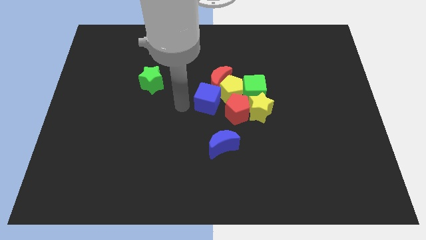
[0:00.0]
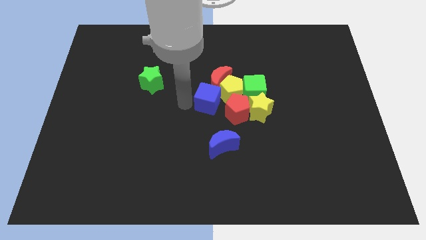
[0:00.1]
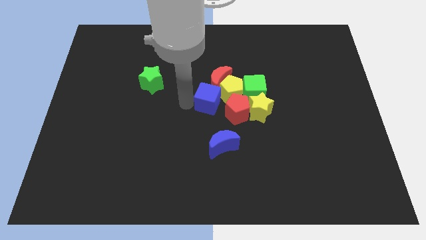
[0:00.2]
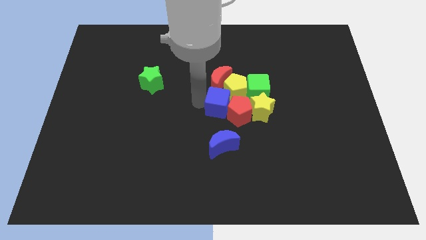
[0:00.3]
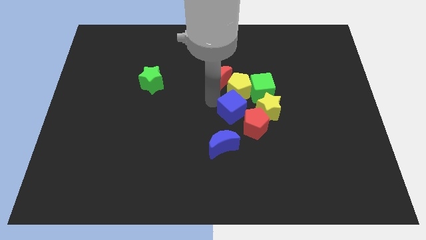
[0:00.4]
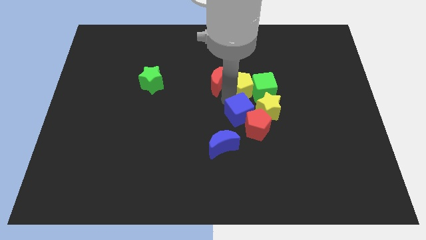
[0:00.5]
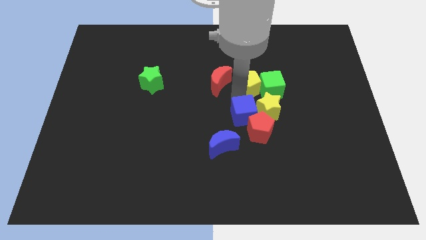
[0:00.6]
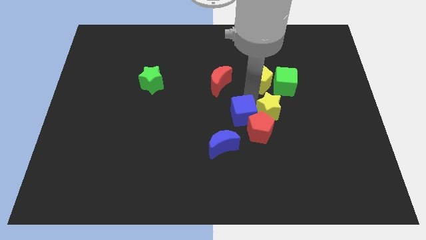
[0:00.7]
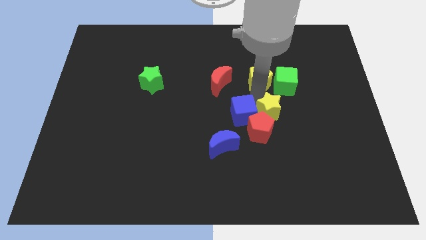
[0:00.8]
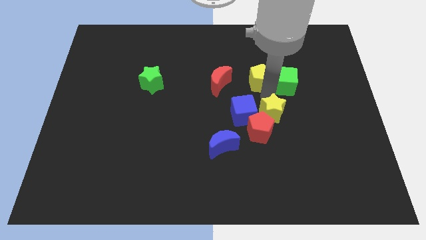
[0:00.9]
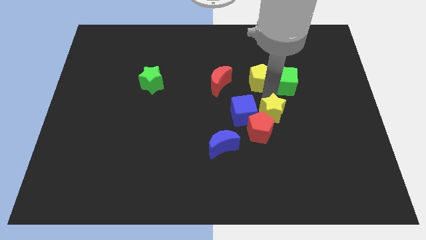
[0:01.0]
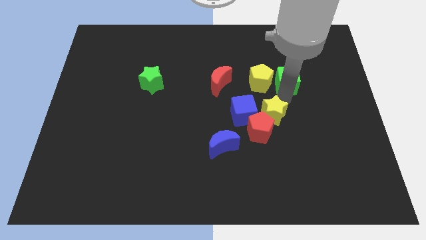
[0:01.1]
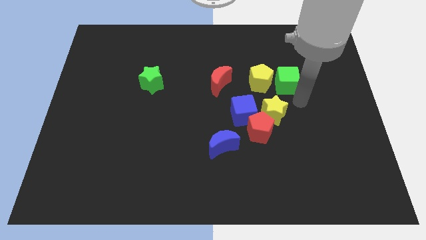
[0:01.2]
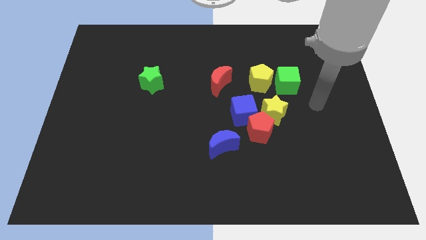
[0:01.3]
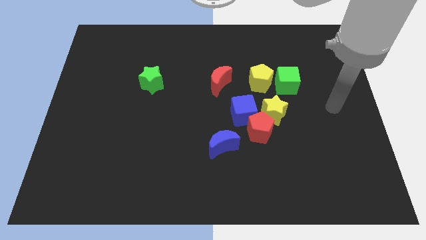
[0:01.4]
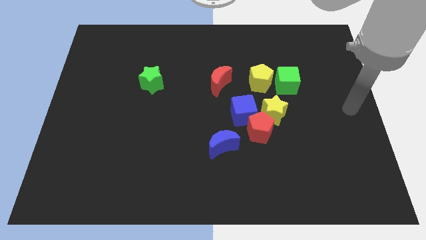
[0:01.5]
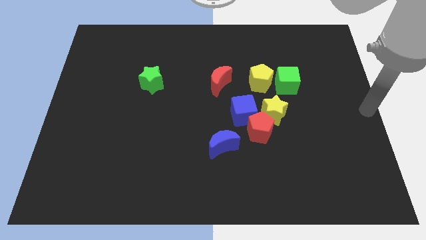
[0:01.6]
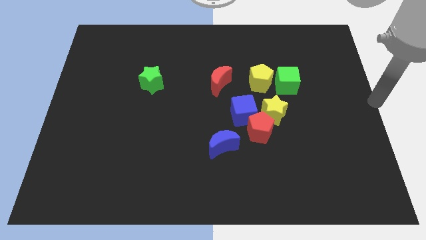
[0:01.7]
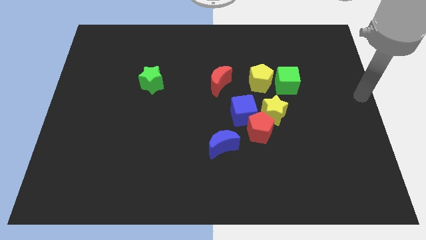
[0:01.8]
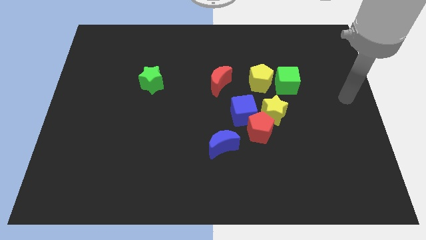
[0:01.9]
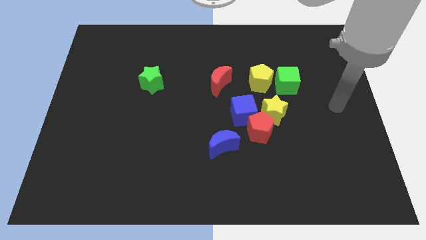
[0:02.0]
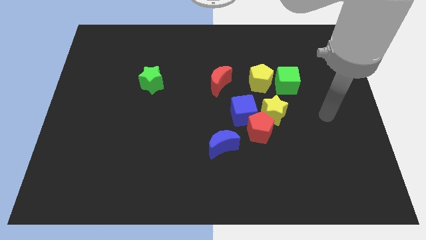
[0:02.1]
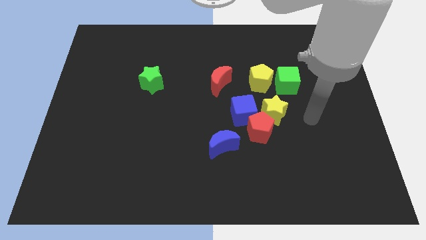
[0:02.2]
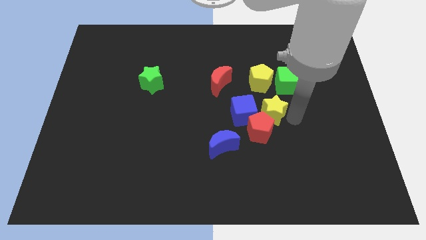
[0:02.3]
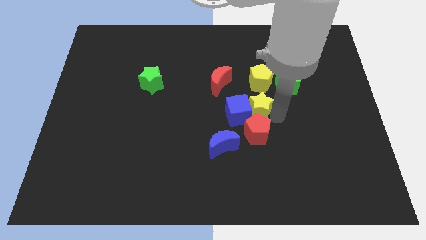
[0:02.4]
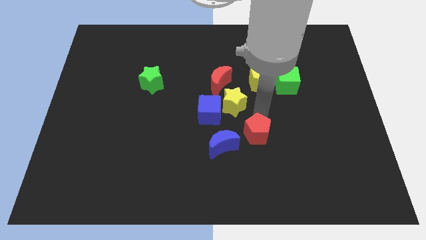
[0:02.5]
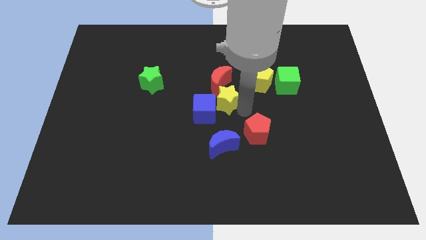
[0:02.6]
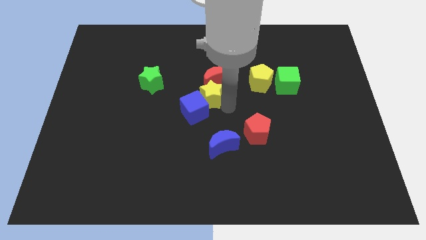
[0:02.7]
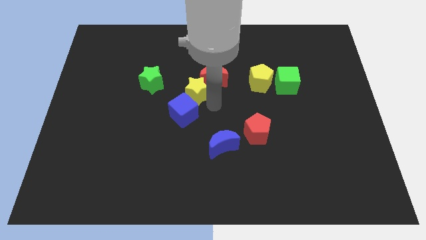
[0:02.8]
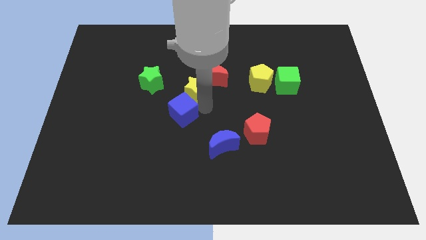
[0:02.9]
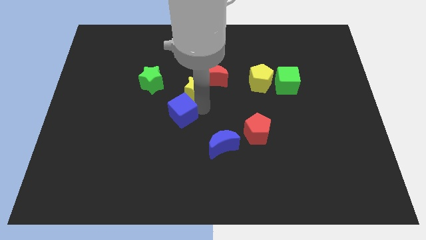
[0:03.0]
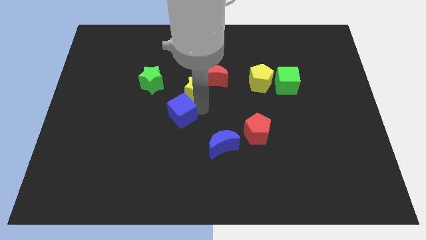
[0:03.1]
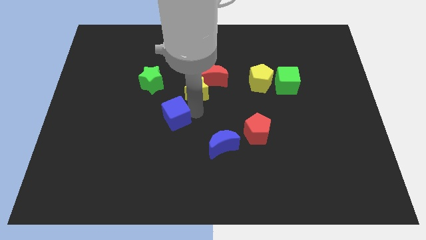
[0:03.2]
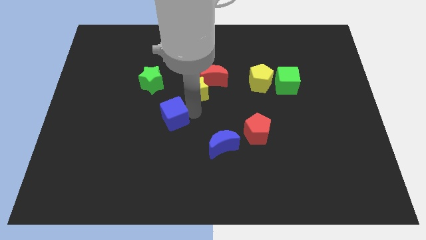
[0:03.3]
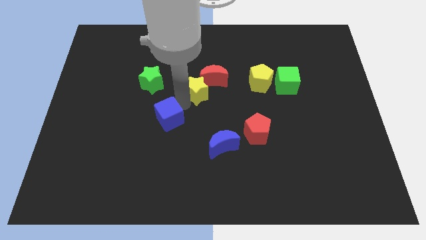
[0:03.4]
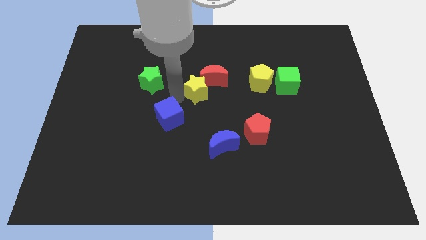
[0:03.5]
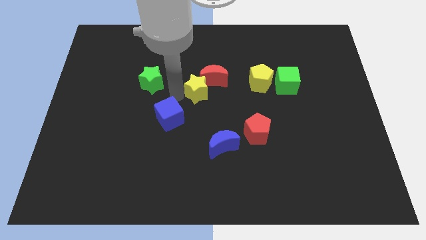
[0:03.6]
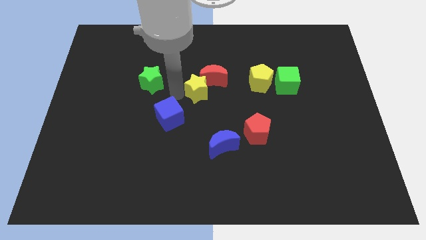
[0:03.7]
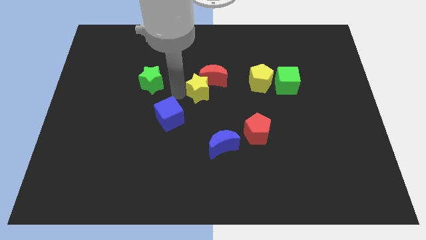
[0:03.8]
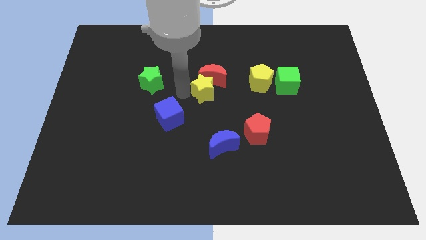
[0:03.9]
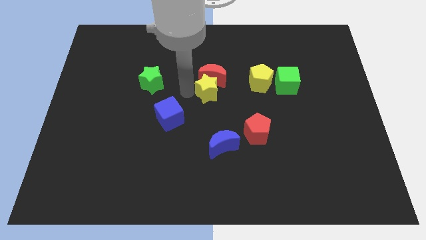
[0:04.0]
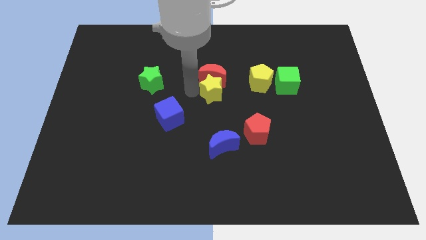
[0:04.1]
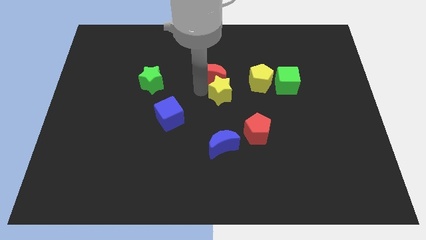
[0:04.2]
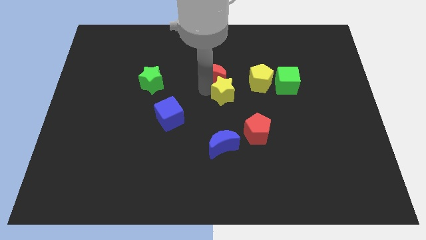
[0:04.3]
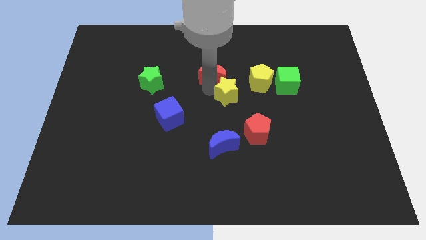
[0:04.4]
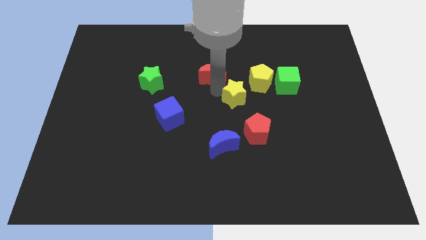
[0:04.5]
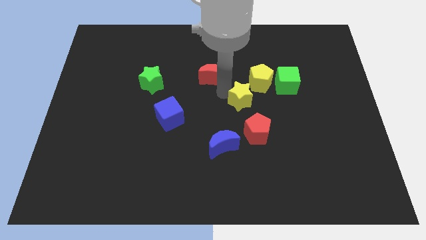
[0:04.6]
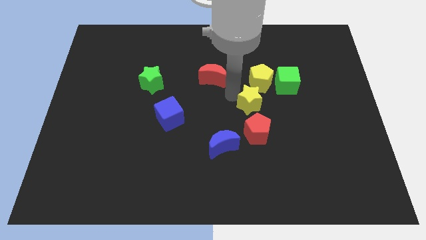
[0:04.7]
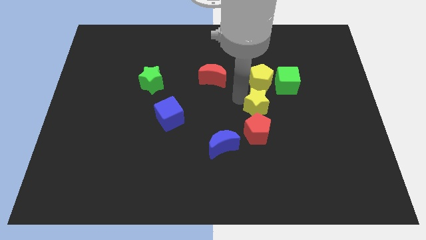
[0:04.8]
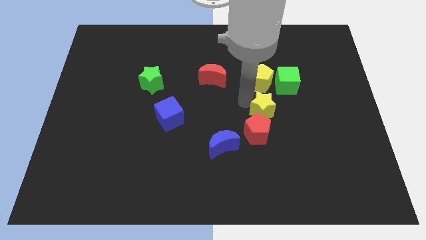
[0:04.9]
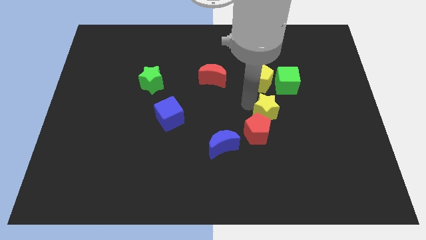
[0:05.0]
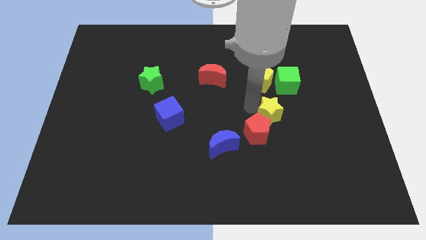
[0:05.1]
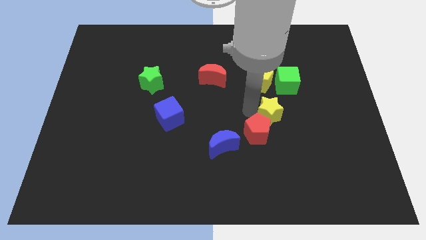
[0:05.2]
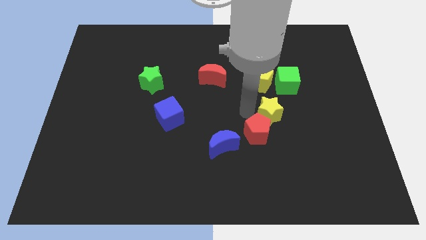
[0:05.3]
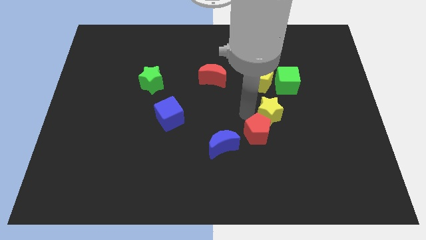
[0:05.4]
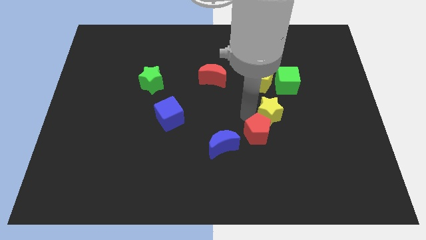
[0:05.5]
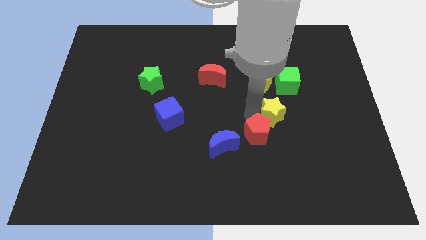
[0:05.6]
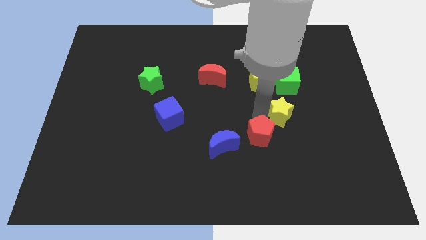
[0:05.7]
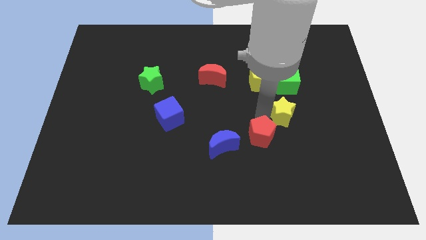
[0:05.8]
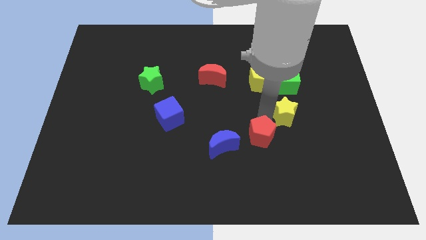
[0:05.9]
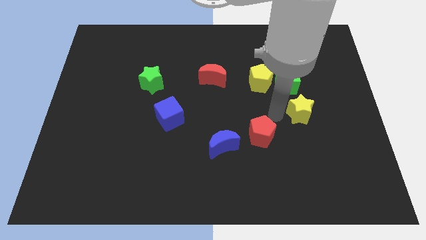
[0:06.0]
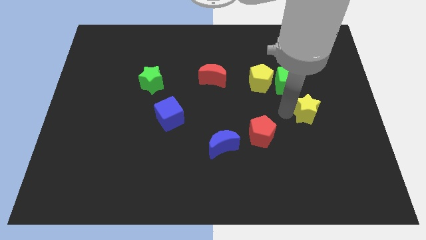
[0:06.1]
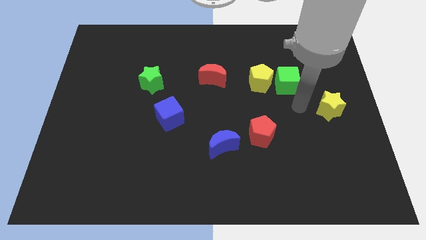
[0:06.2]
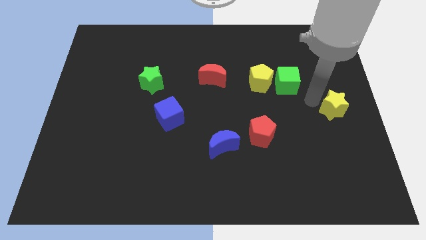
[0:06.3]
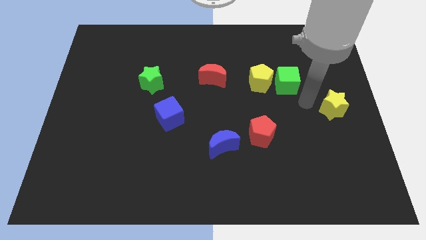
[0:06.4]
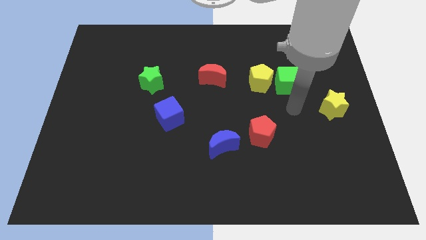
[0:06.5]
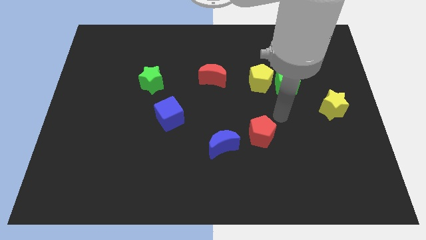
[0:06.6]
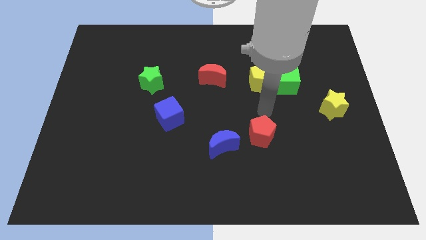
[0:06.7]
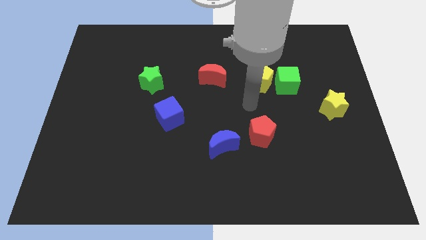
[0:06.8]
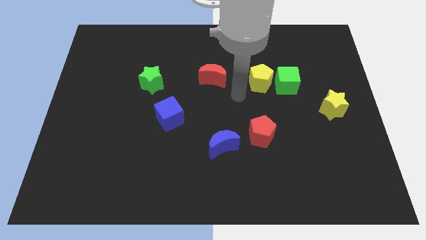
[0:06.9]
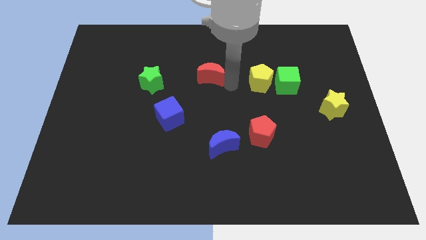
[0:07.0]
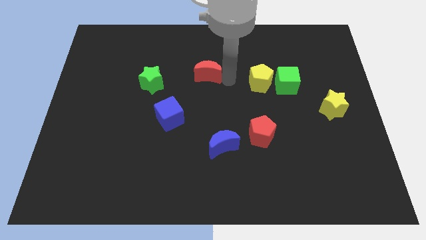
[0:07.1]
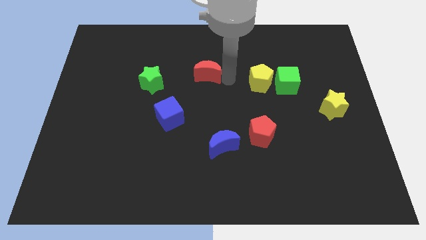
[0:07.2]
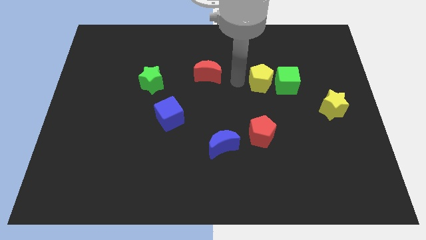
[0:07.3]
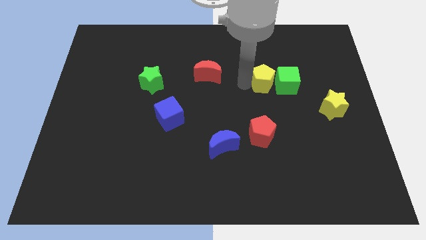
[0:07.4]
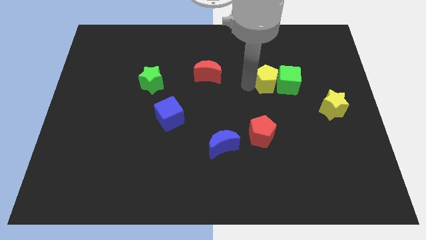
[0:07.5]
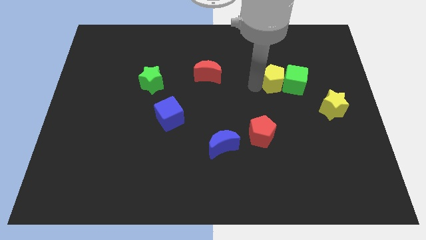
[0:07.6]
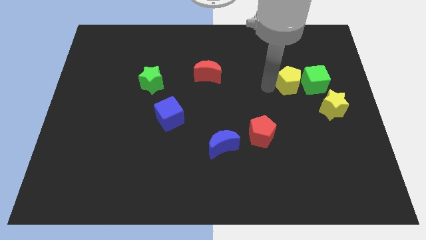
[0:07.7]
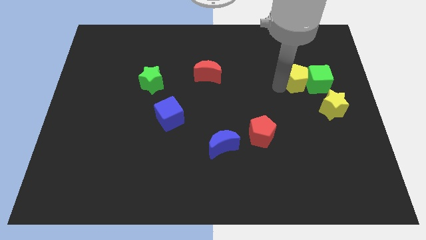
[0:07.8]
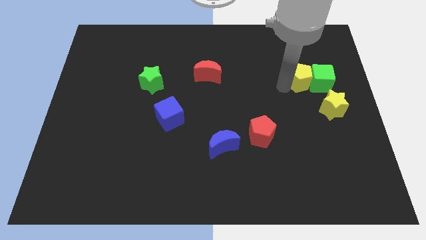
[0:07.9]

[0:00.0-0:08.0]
disturb the group of blocks

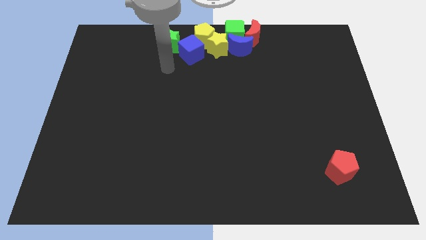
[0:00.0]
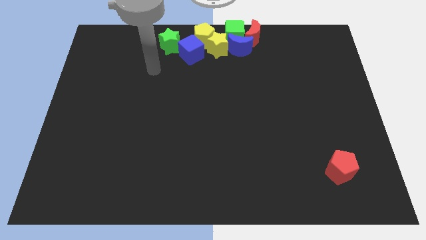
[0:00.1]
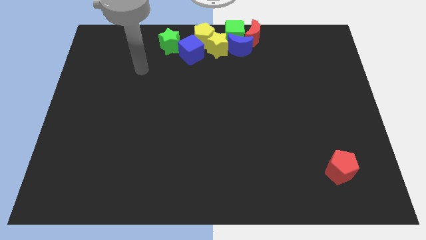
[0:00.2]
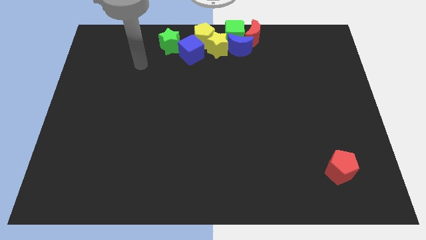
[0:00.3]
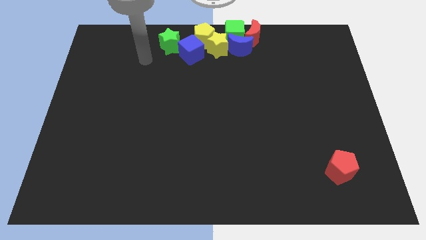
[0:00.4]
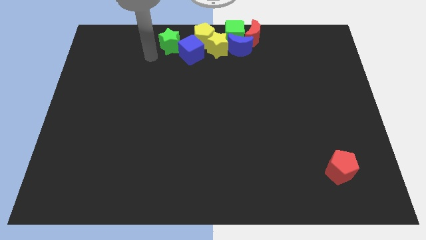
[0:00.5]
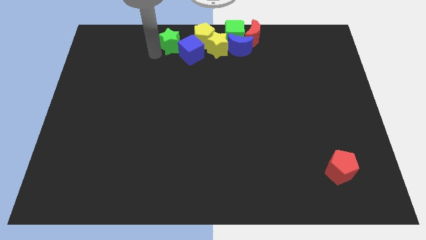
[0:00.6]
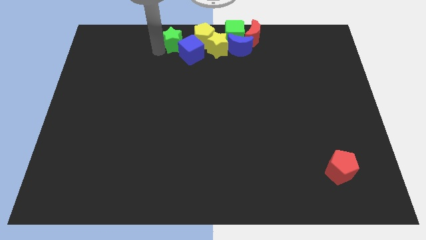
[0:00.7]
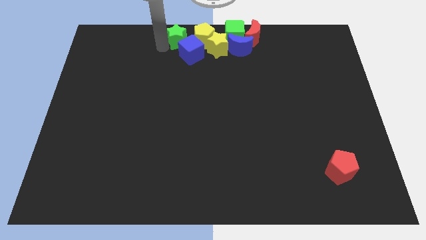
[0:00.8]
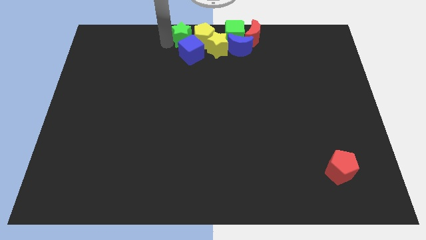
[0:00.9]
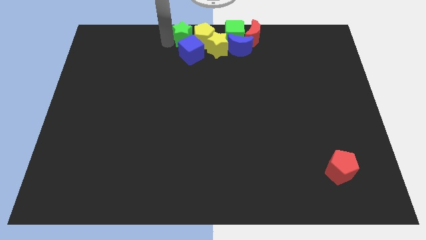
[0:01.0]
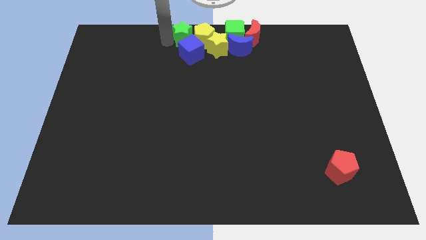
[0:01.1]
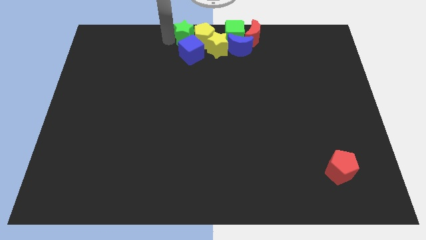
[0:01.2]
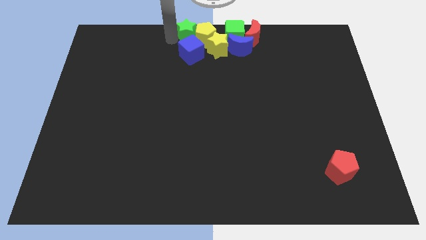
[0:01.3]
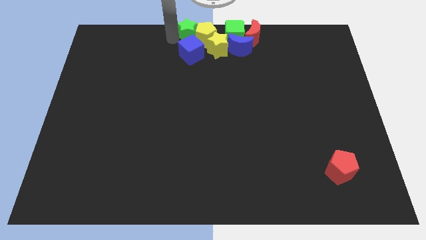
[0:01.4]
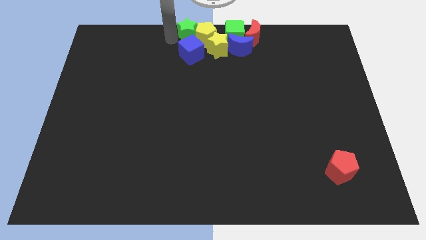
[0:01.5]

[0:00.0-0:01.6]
move the green star to the left side of the yellow pentagon
